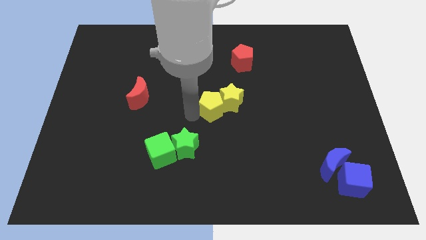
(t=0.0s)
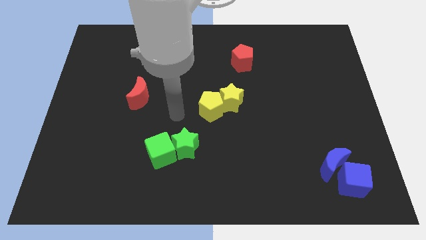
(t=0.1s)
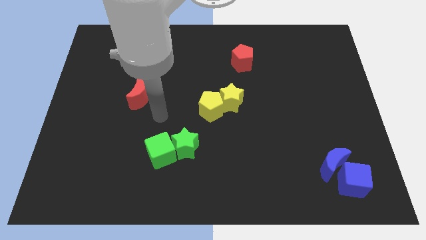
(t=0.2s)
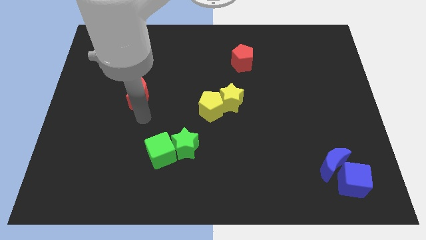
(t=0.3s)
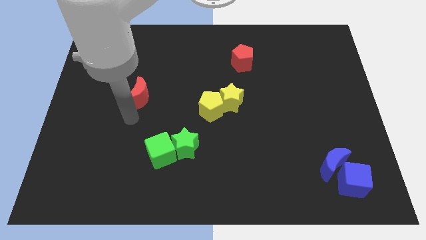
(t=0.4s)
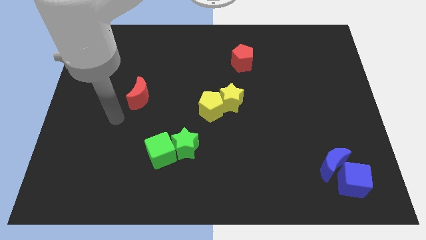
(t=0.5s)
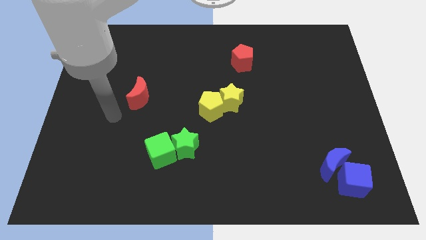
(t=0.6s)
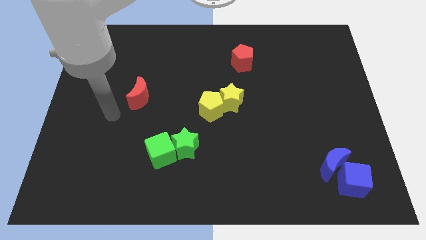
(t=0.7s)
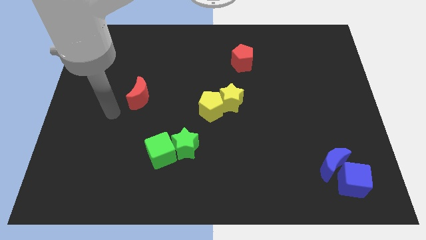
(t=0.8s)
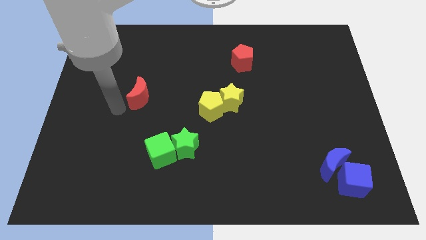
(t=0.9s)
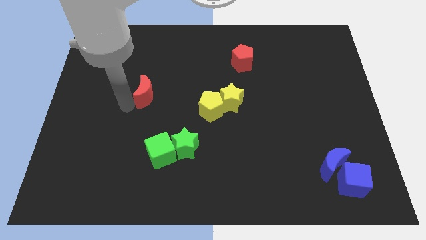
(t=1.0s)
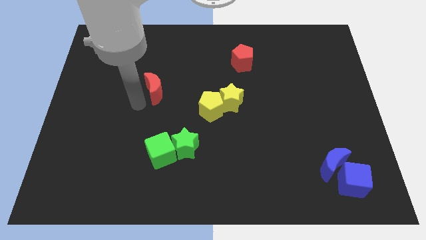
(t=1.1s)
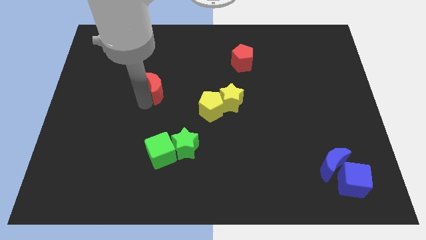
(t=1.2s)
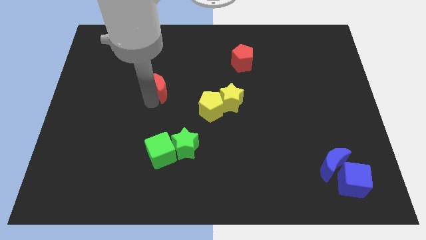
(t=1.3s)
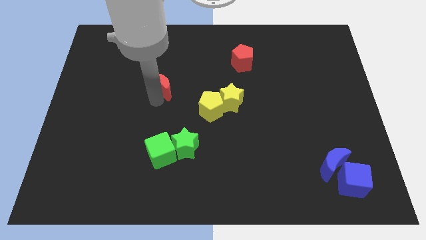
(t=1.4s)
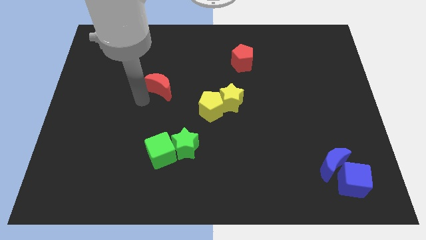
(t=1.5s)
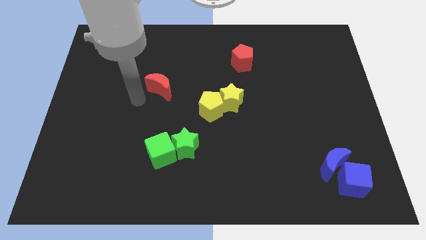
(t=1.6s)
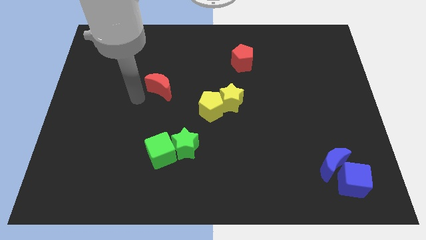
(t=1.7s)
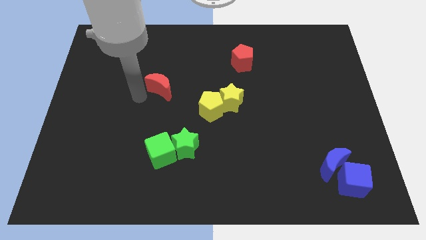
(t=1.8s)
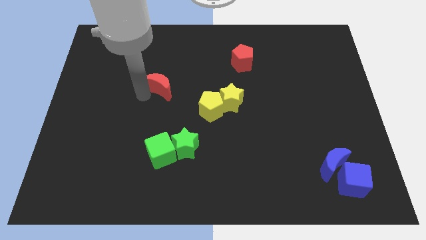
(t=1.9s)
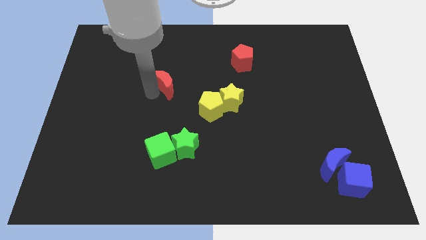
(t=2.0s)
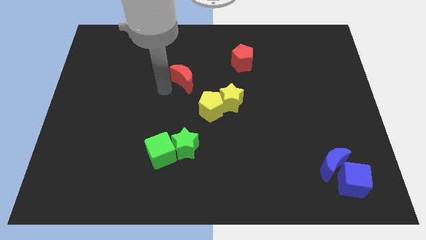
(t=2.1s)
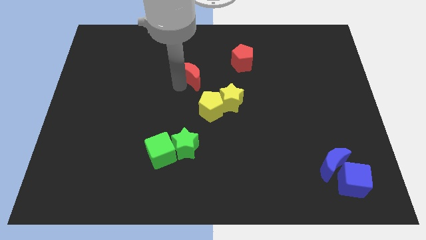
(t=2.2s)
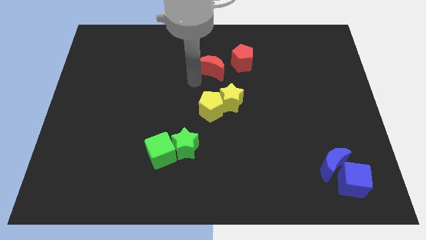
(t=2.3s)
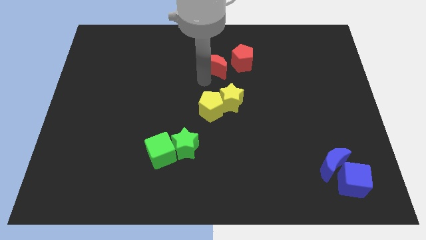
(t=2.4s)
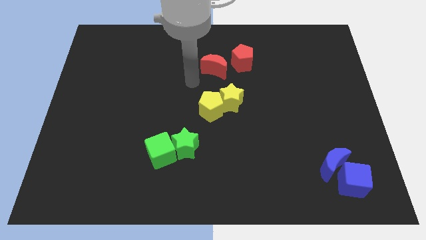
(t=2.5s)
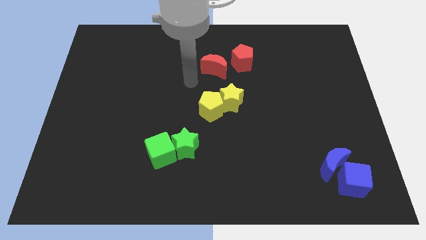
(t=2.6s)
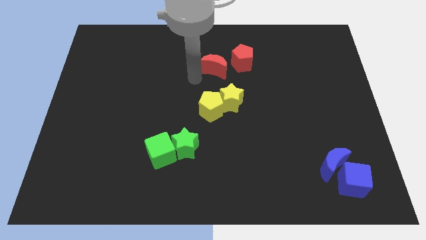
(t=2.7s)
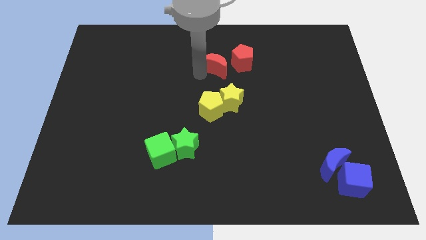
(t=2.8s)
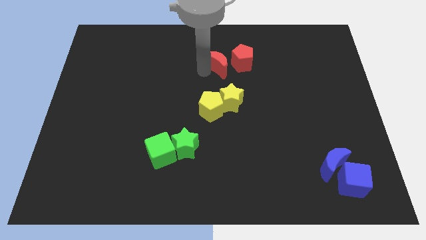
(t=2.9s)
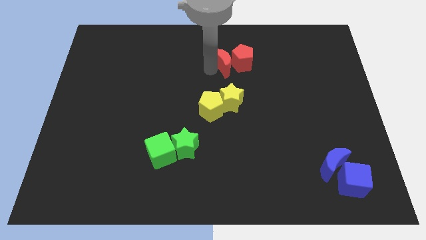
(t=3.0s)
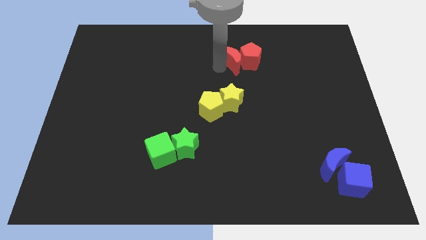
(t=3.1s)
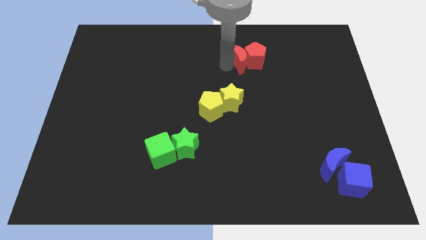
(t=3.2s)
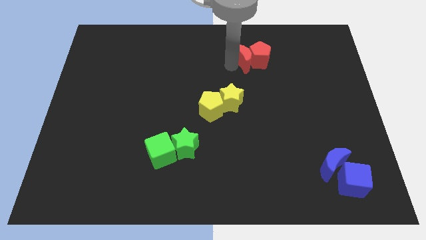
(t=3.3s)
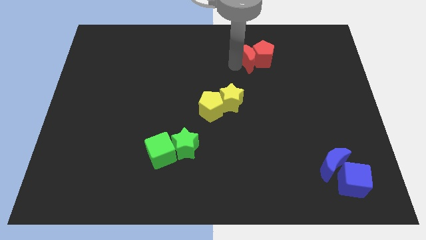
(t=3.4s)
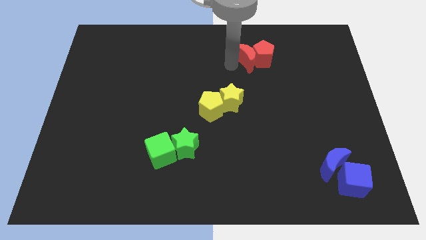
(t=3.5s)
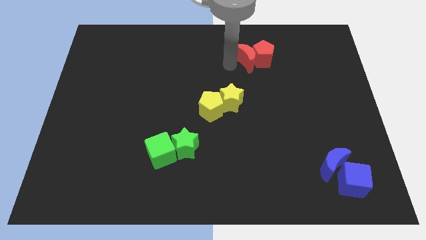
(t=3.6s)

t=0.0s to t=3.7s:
push red moon to the left of red pentagon

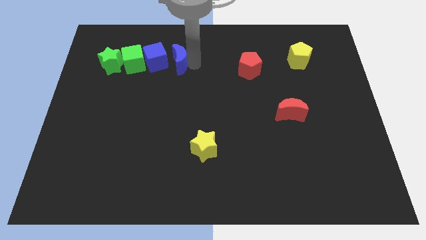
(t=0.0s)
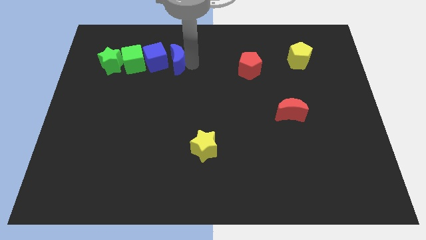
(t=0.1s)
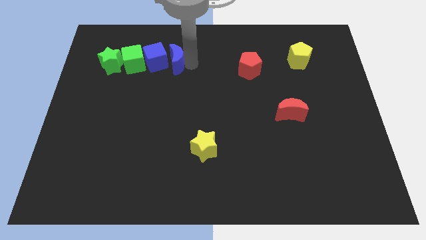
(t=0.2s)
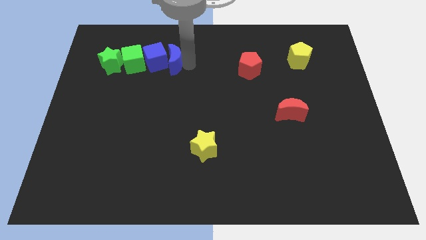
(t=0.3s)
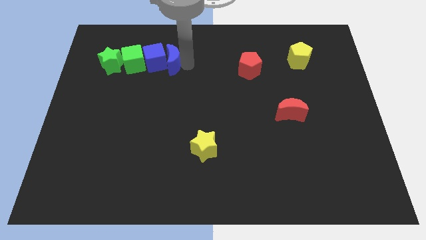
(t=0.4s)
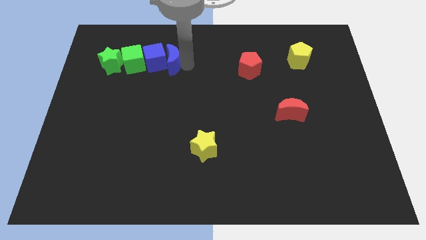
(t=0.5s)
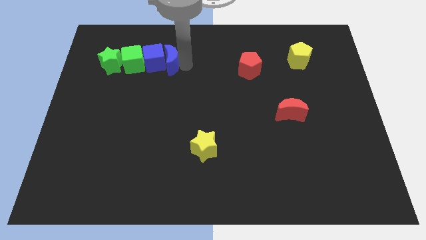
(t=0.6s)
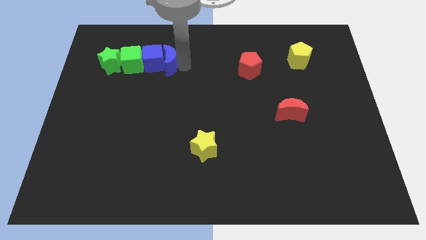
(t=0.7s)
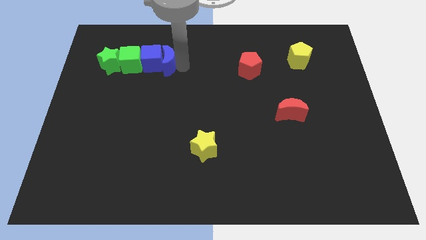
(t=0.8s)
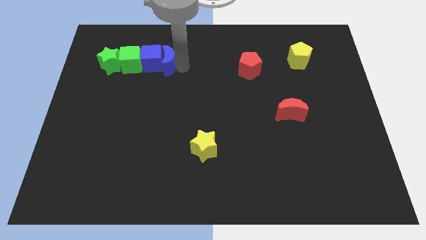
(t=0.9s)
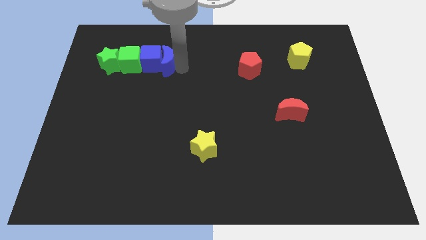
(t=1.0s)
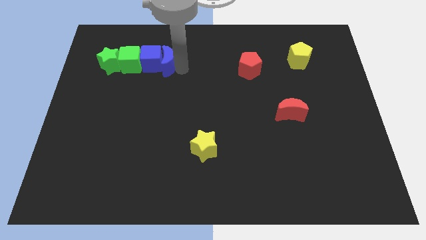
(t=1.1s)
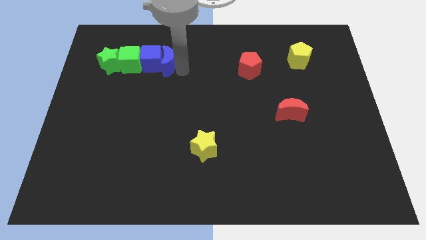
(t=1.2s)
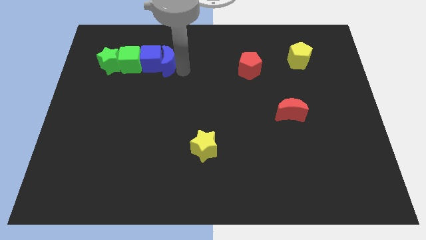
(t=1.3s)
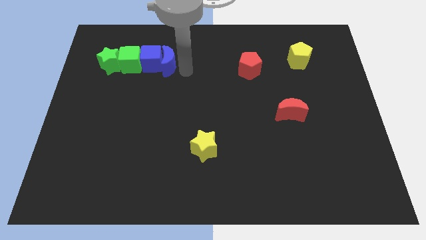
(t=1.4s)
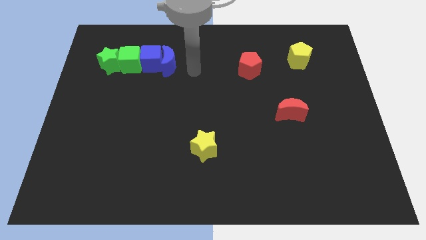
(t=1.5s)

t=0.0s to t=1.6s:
push the blue moon into the blue cube

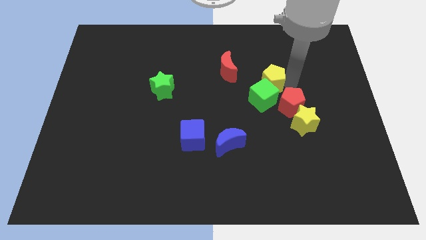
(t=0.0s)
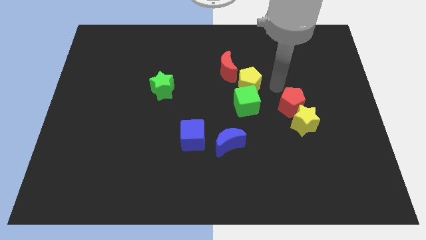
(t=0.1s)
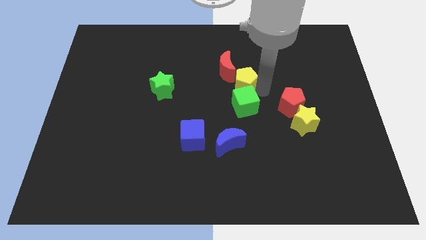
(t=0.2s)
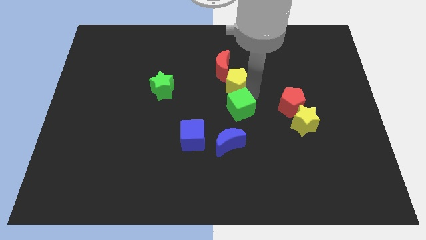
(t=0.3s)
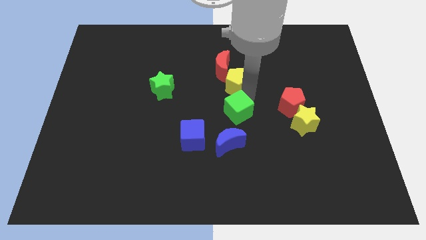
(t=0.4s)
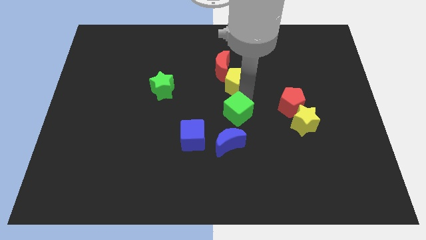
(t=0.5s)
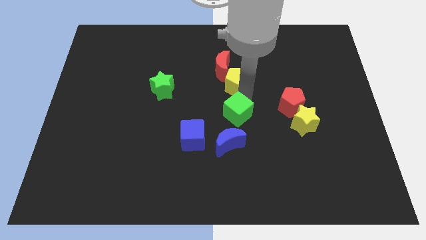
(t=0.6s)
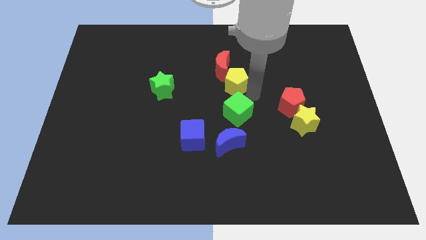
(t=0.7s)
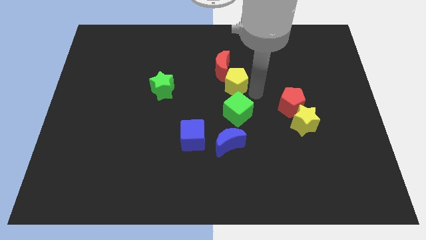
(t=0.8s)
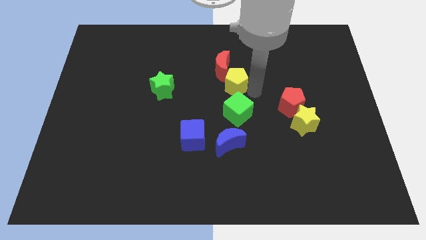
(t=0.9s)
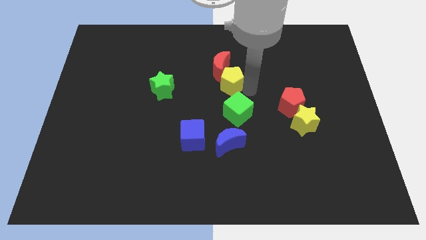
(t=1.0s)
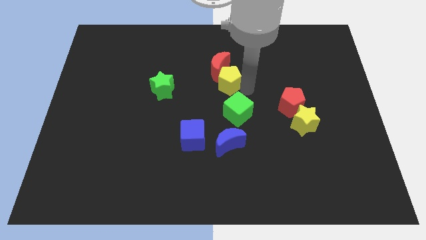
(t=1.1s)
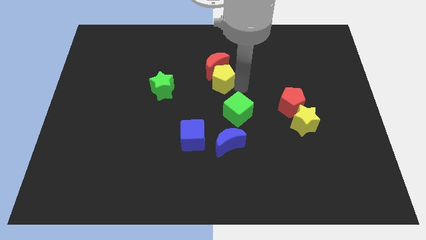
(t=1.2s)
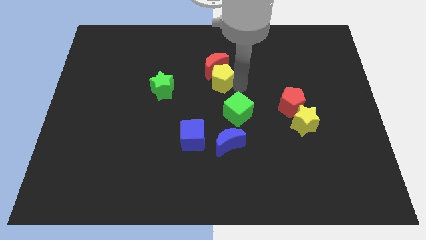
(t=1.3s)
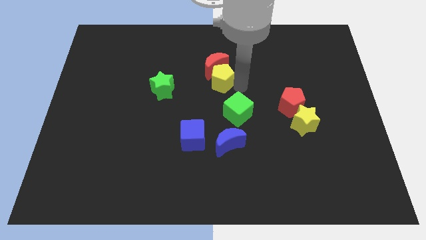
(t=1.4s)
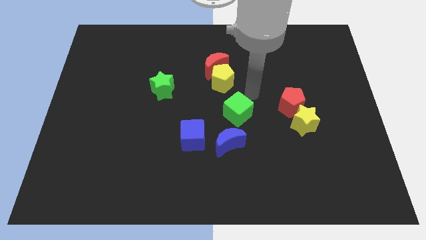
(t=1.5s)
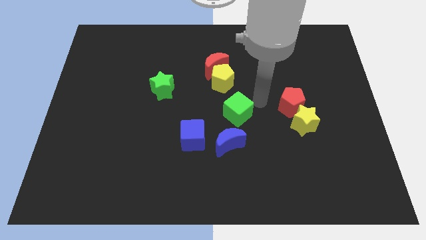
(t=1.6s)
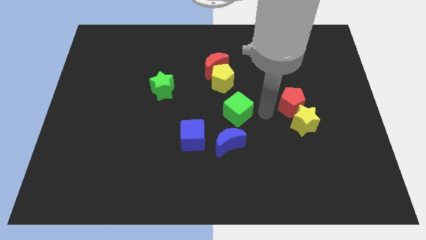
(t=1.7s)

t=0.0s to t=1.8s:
push the yellow pentagon into the red crescent

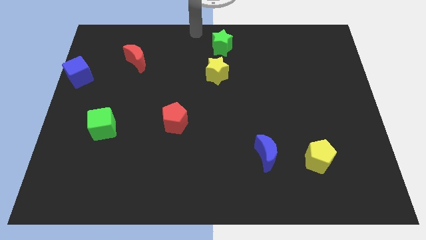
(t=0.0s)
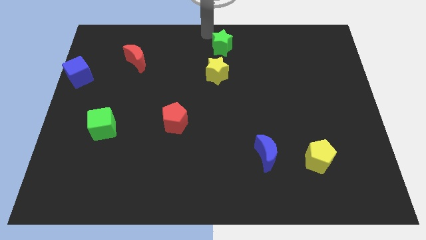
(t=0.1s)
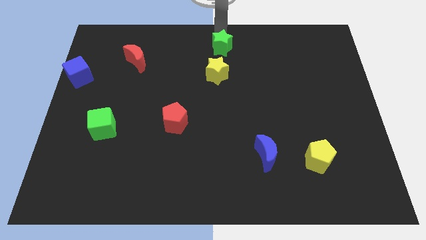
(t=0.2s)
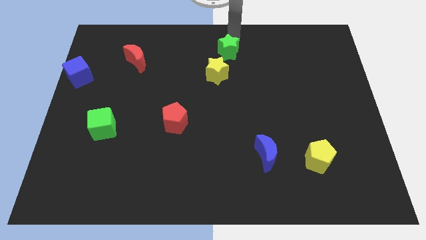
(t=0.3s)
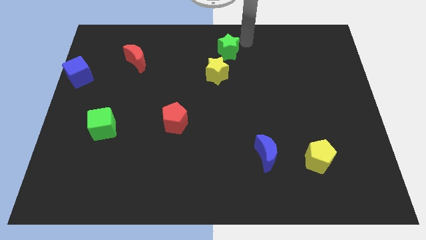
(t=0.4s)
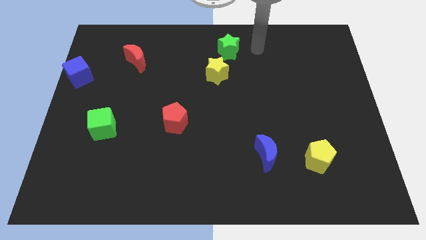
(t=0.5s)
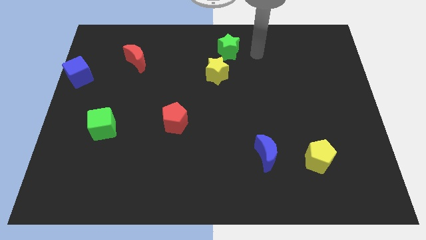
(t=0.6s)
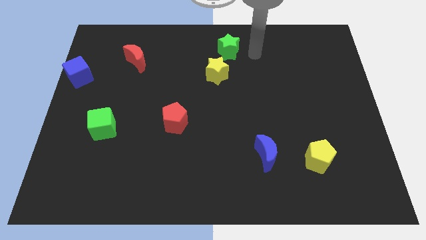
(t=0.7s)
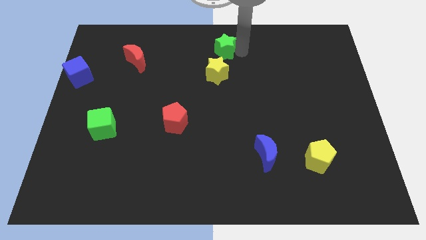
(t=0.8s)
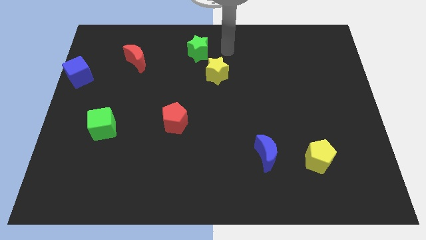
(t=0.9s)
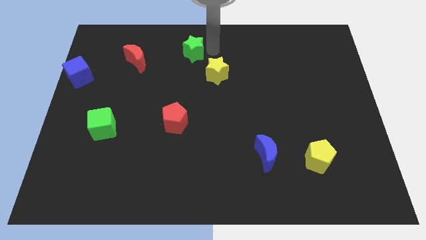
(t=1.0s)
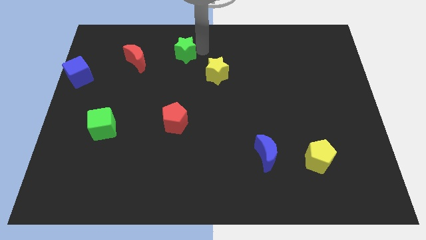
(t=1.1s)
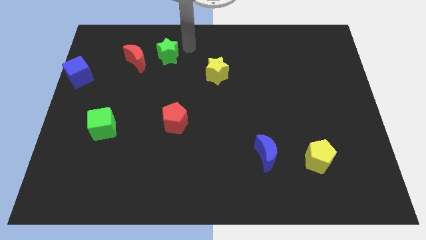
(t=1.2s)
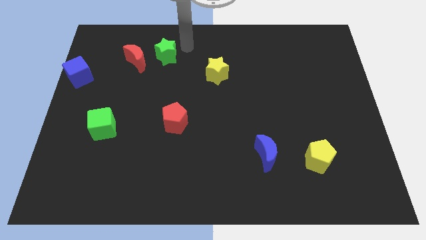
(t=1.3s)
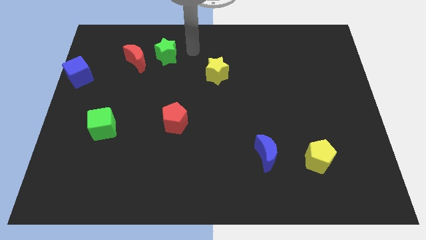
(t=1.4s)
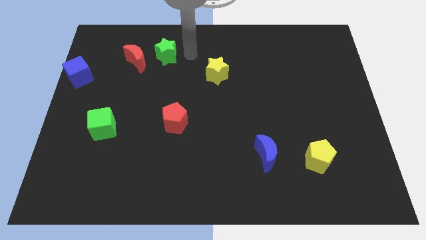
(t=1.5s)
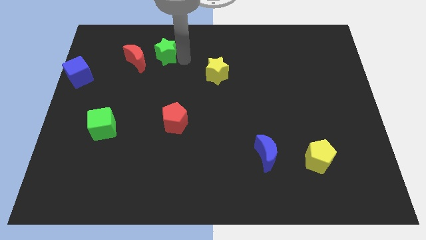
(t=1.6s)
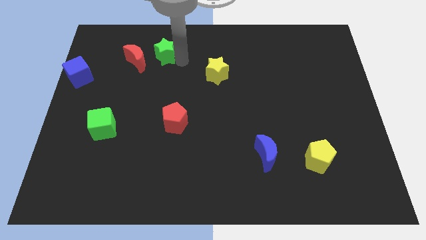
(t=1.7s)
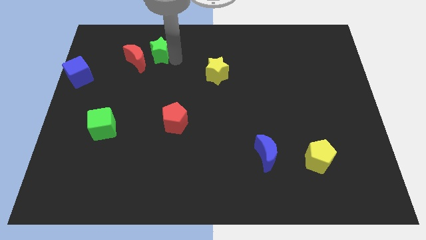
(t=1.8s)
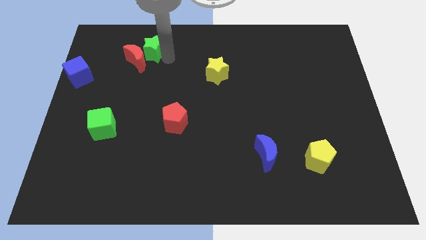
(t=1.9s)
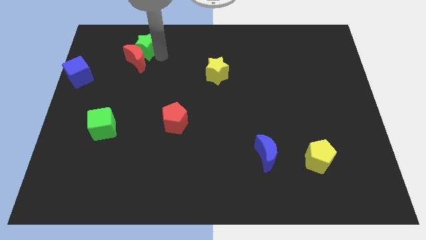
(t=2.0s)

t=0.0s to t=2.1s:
move the green star to the right of red moon
